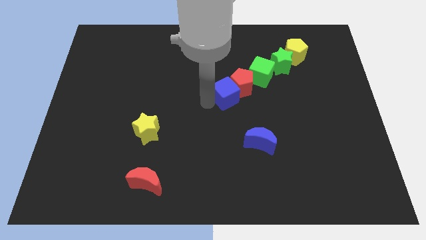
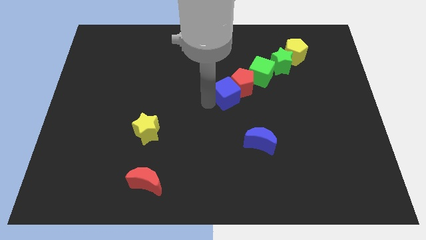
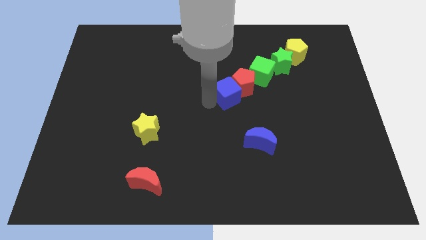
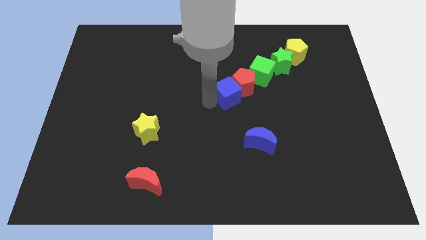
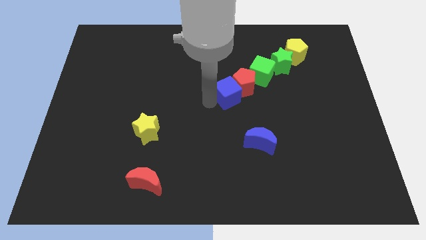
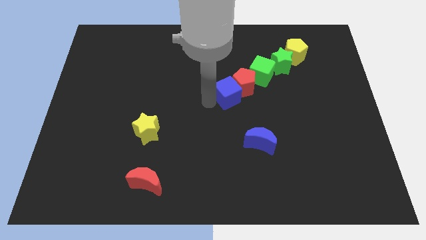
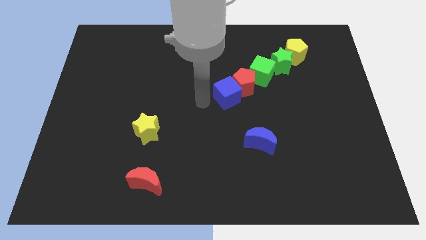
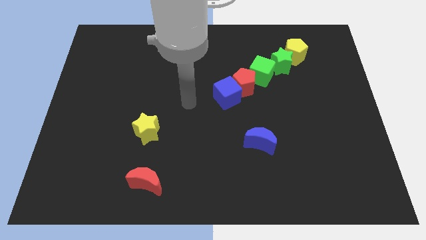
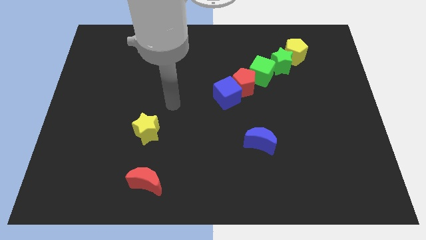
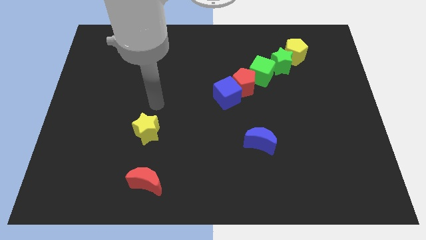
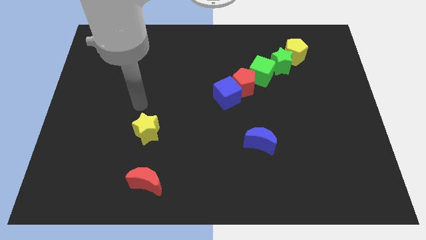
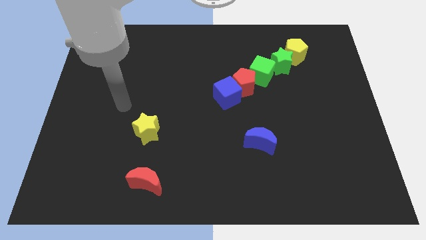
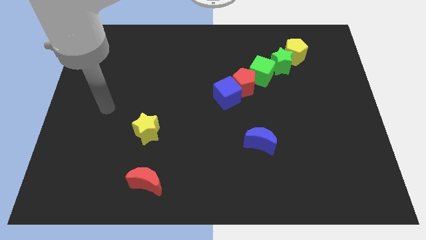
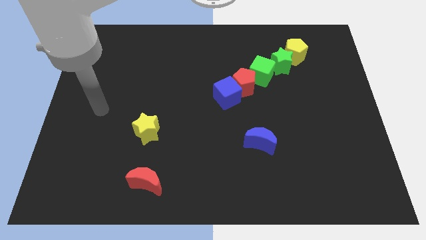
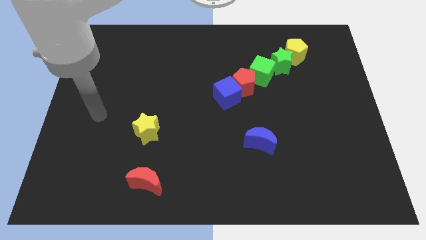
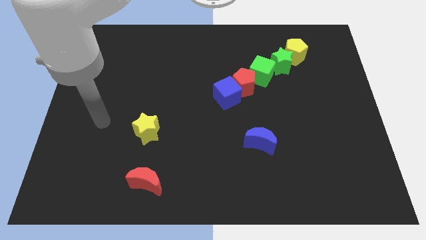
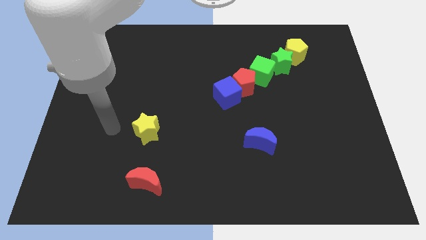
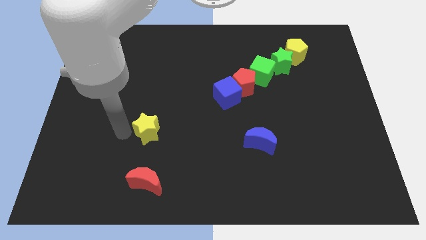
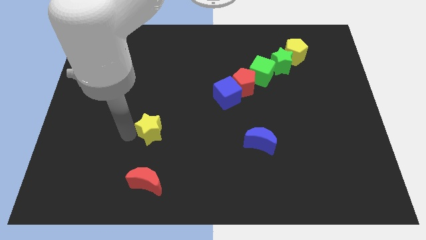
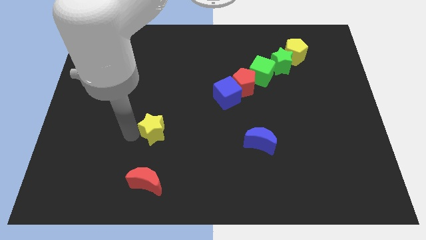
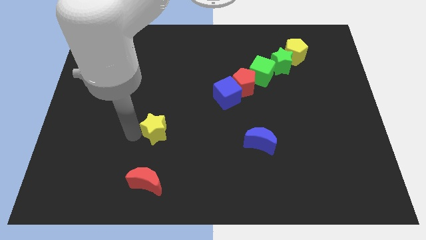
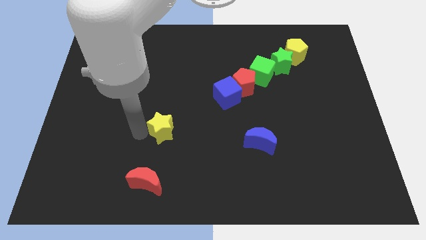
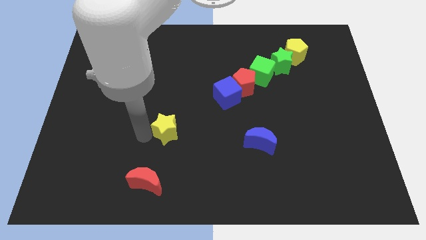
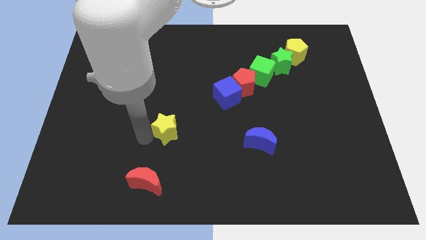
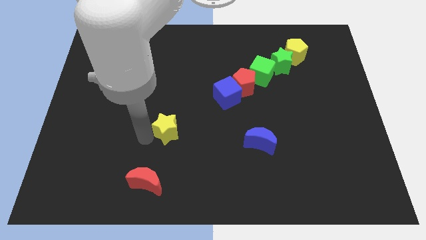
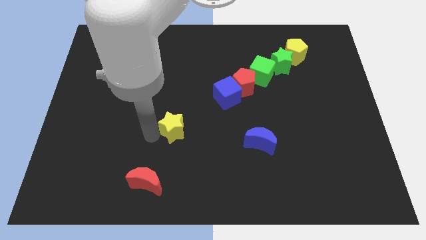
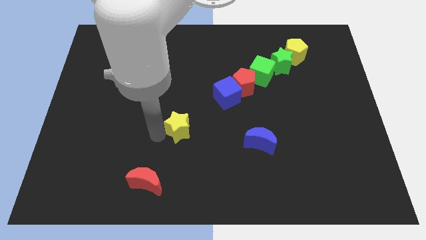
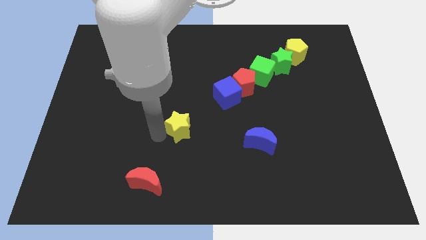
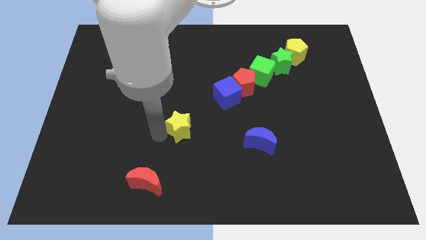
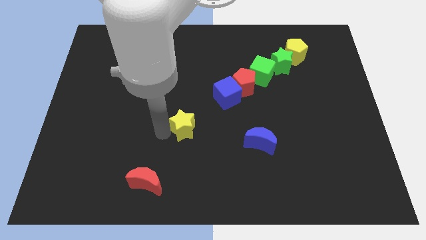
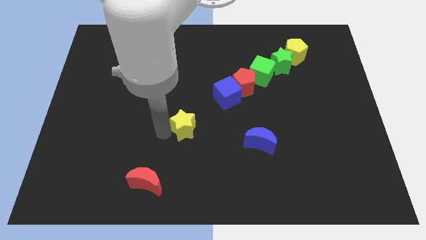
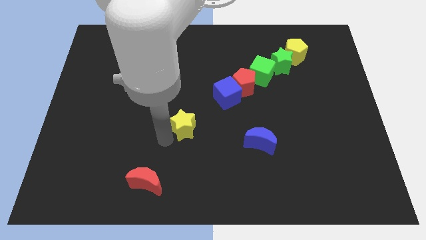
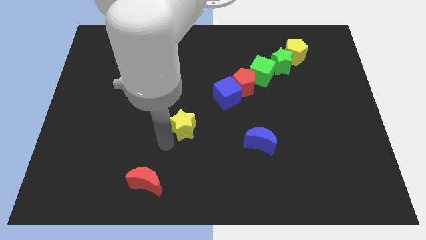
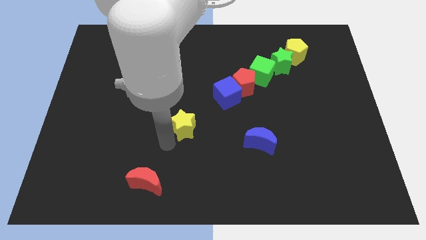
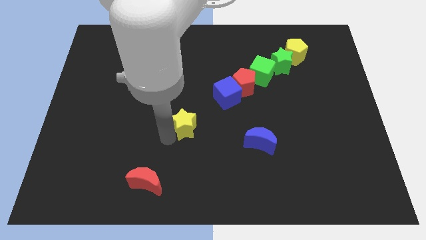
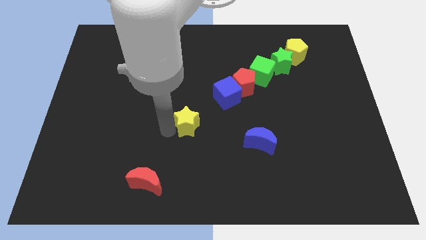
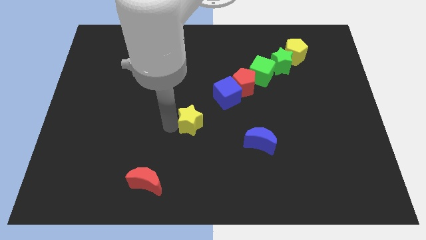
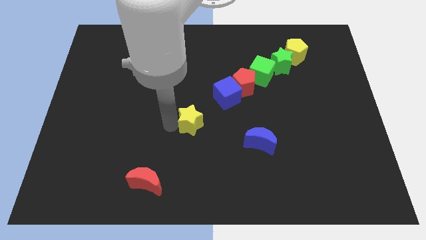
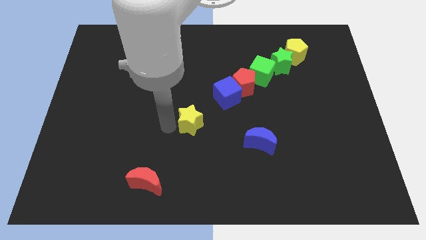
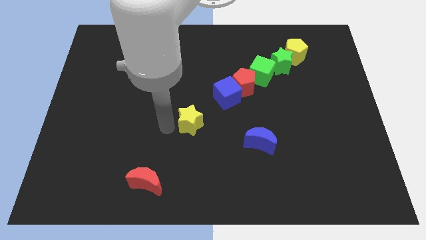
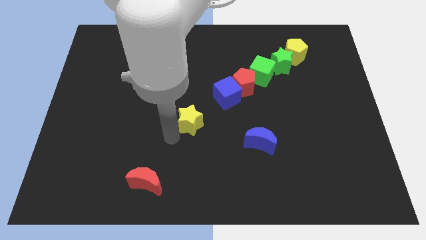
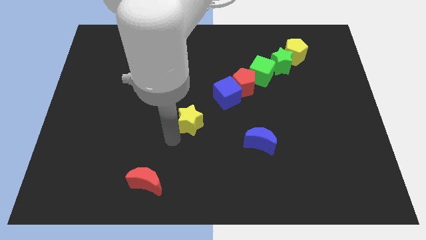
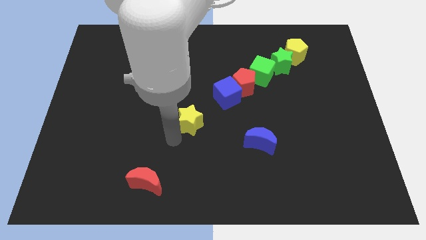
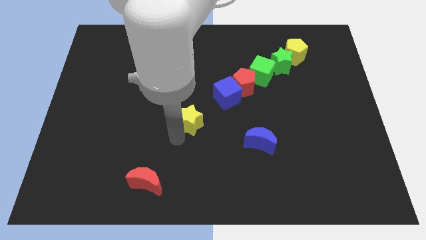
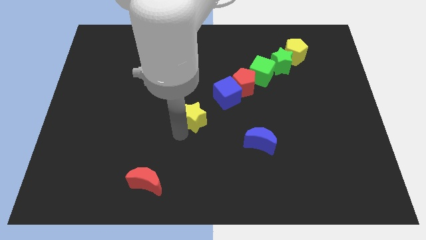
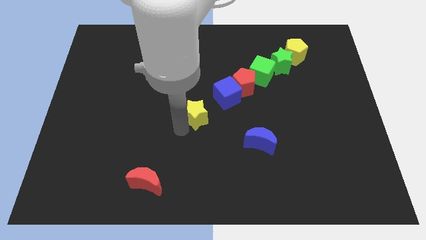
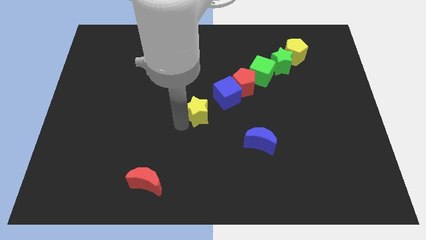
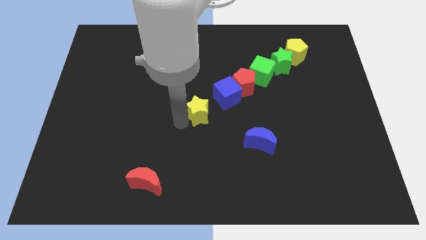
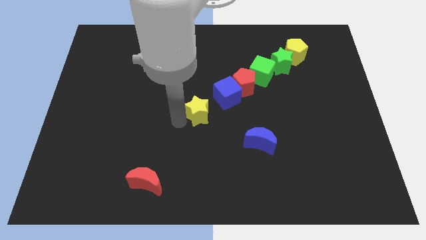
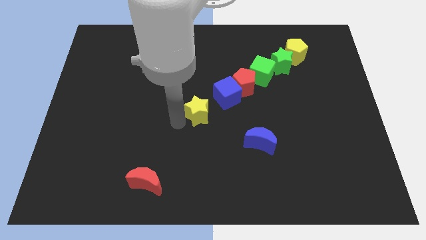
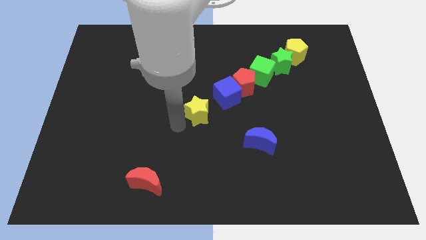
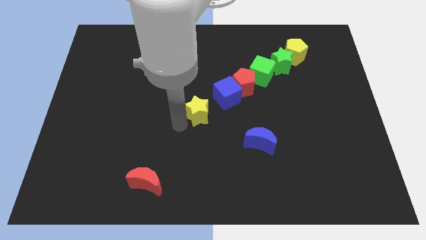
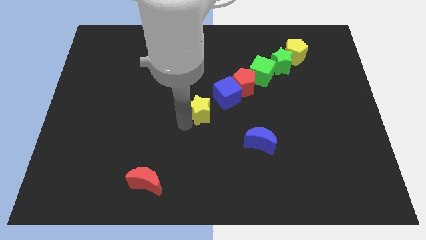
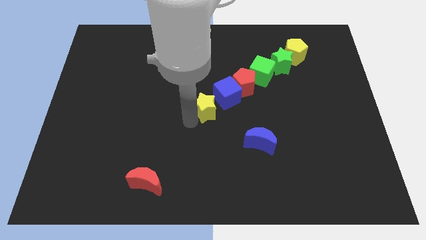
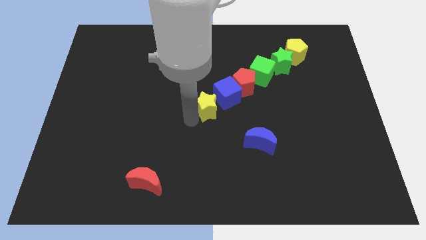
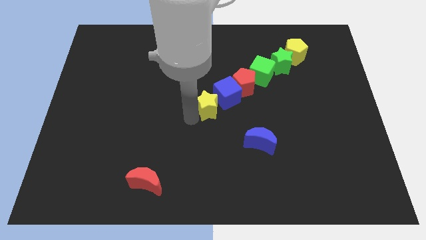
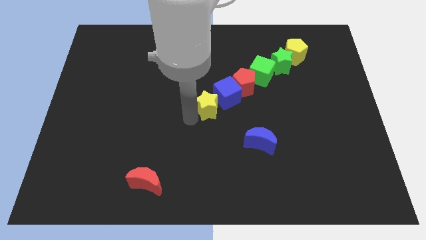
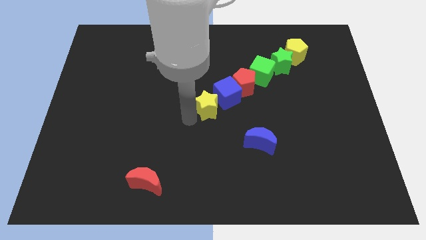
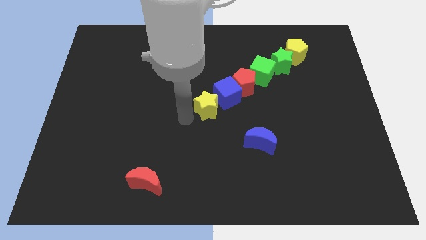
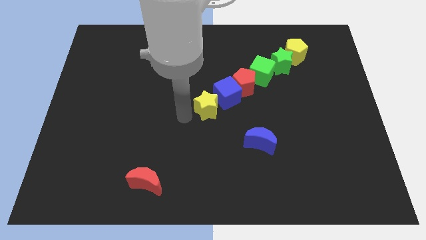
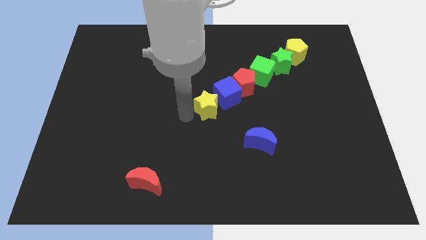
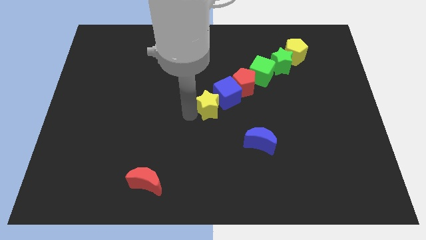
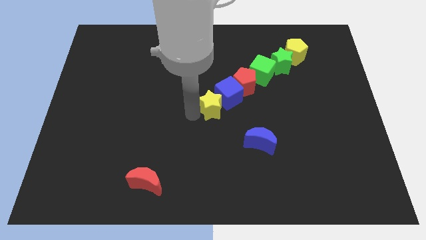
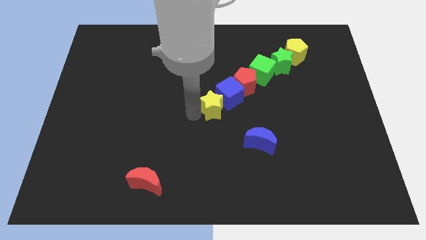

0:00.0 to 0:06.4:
place the yellow star below the blue moon

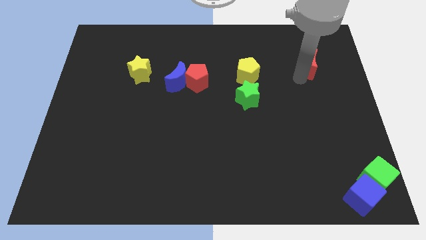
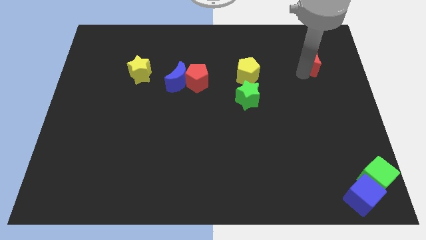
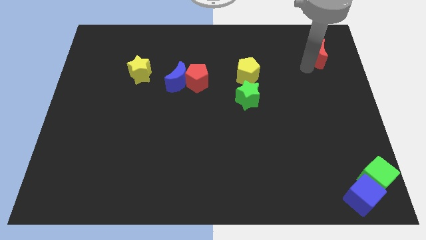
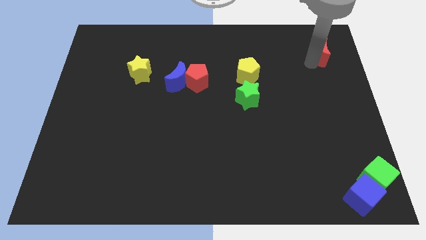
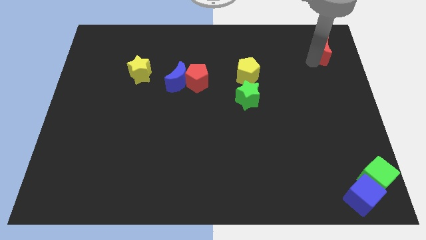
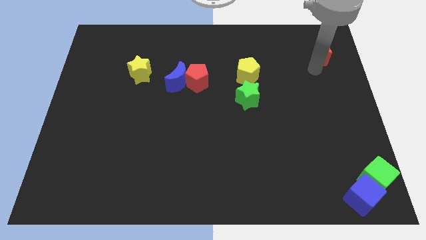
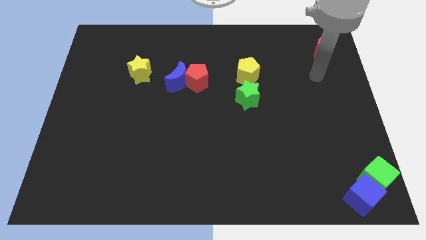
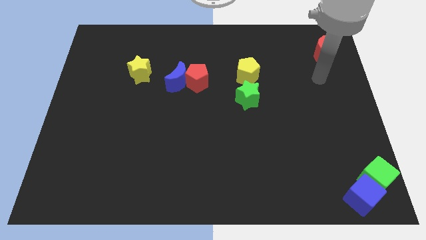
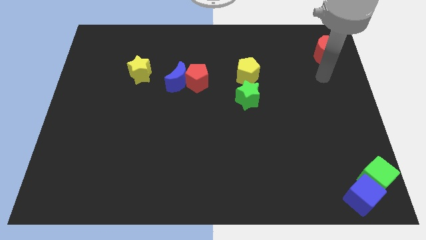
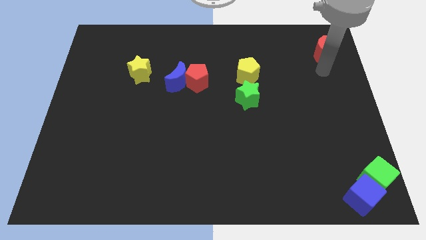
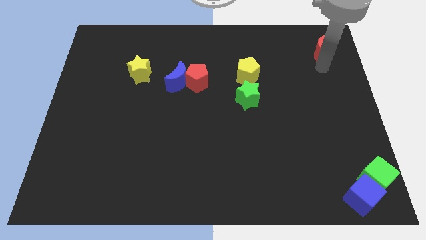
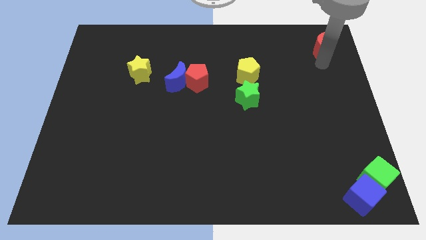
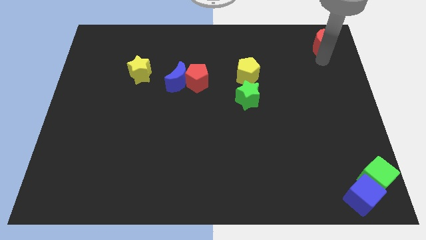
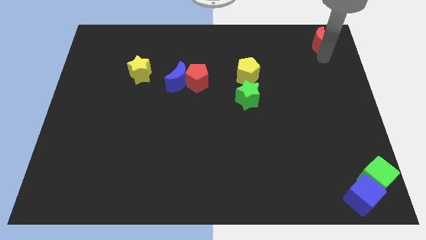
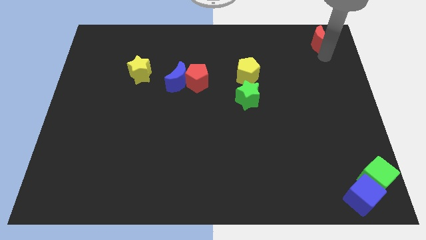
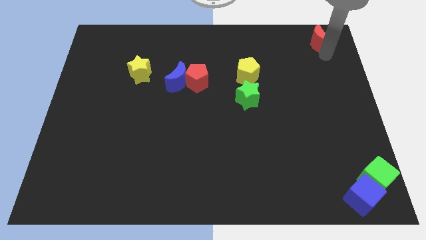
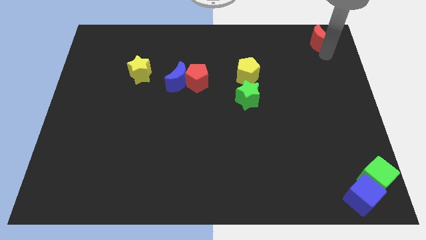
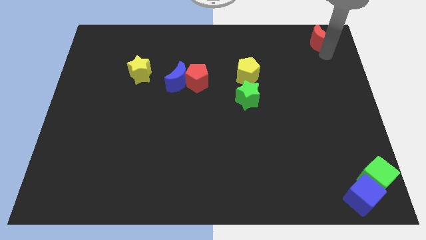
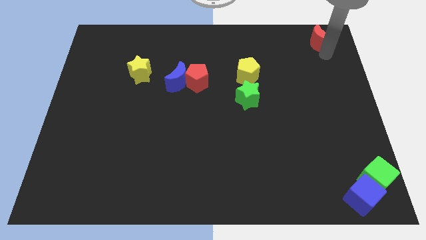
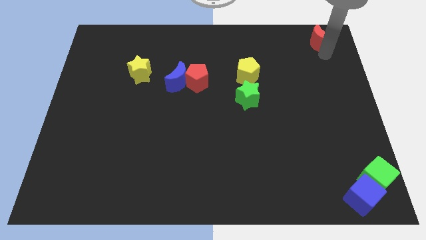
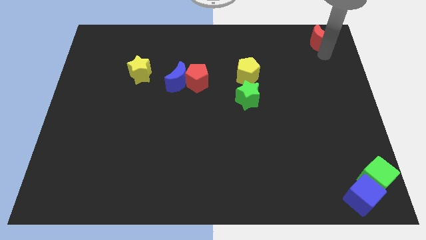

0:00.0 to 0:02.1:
push the red crescent to the top right corner of the board

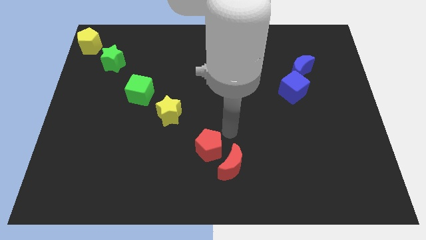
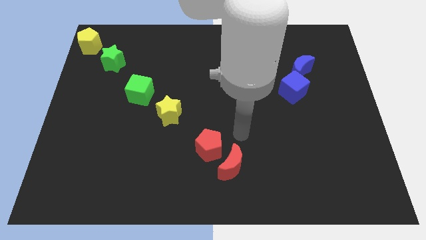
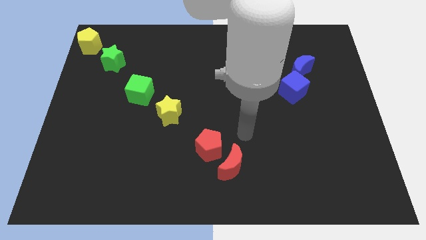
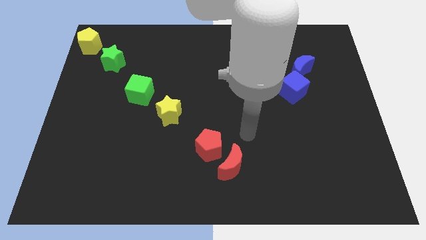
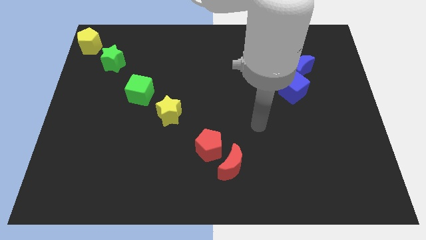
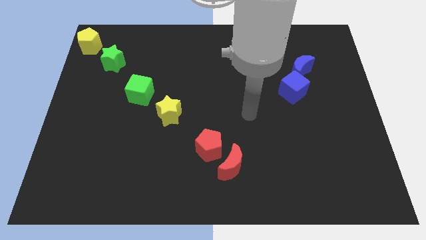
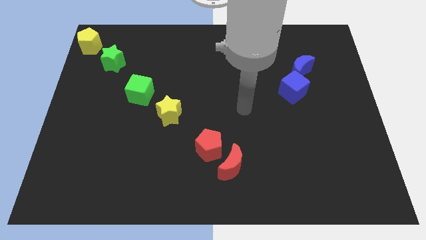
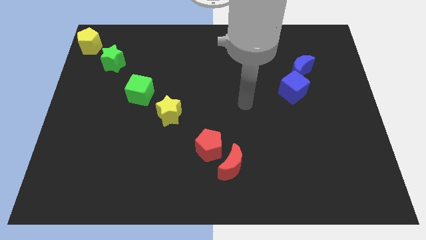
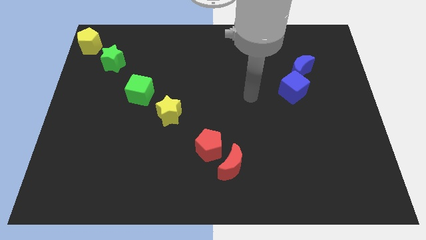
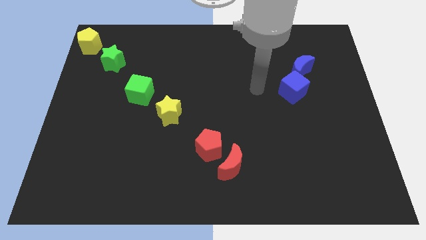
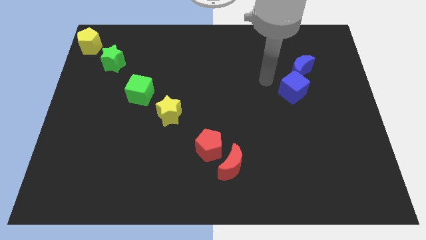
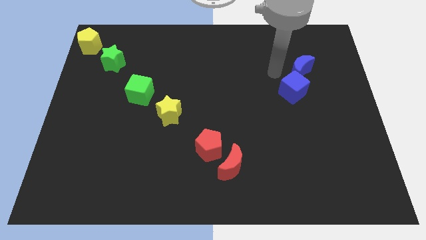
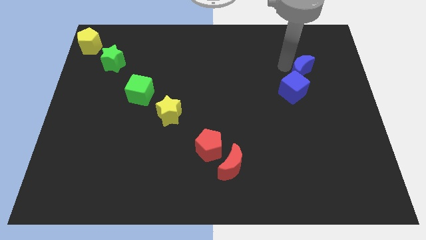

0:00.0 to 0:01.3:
move your arm towards the blue blocks
